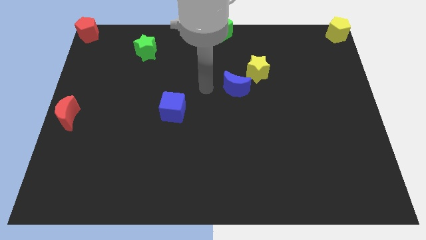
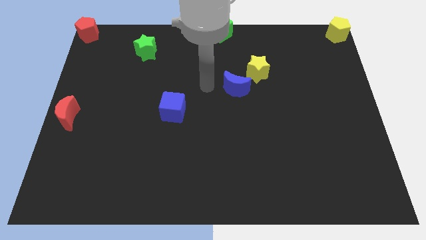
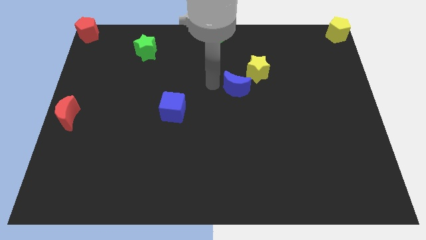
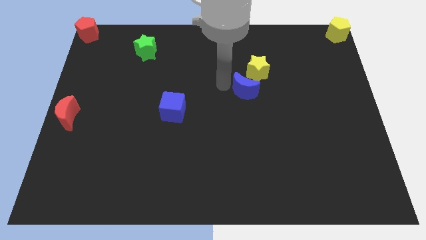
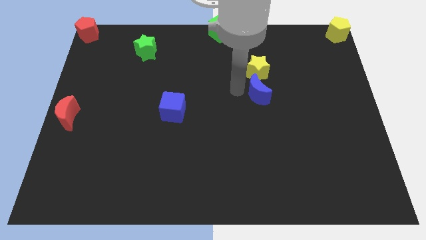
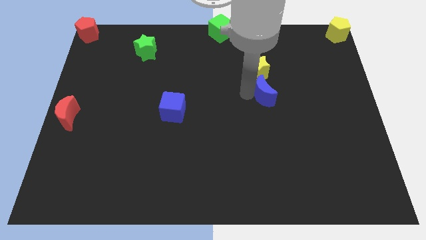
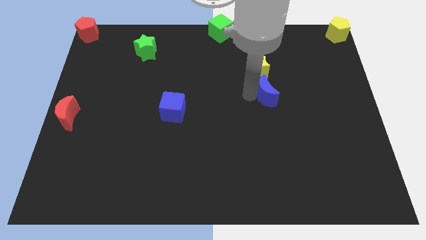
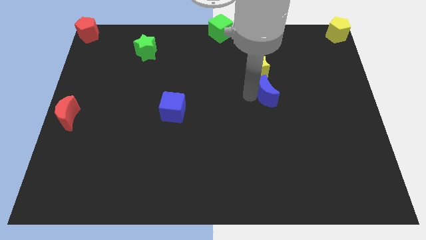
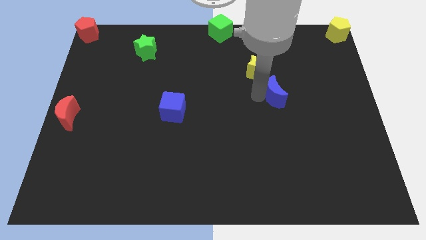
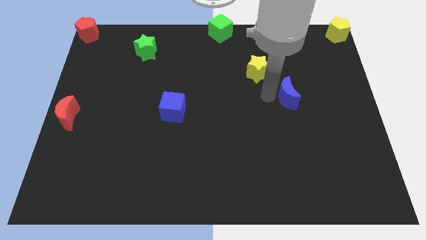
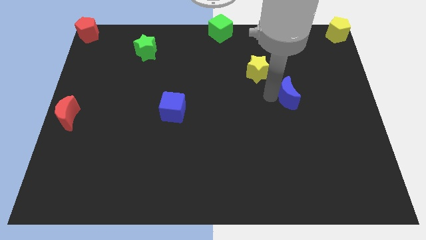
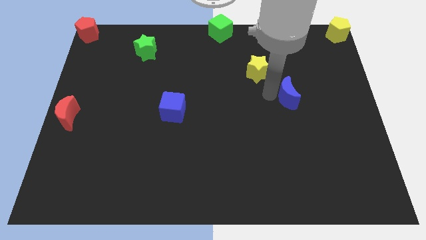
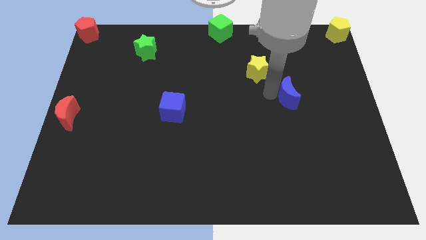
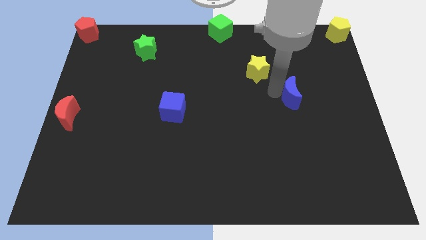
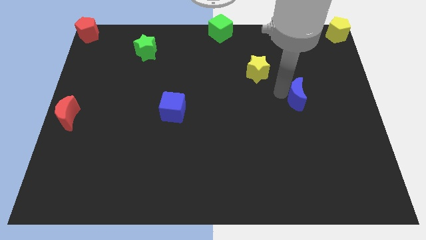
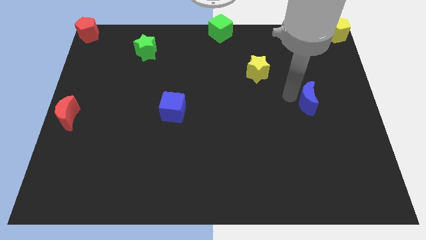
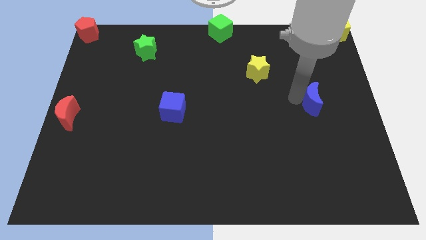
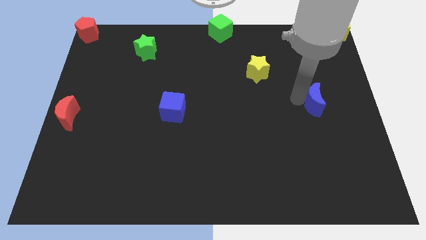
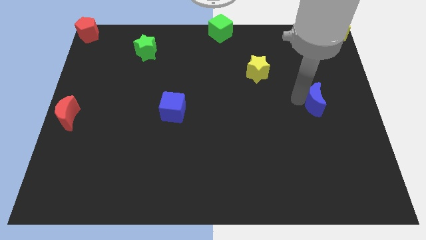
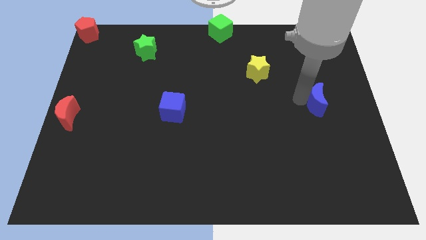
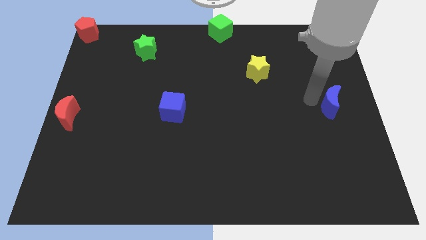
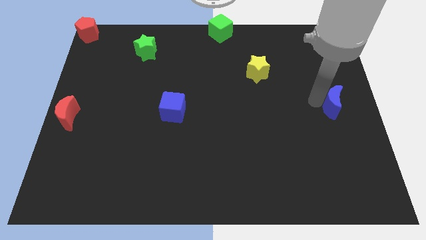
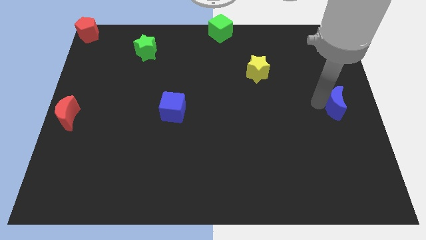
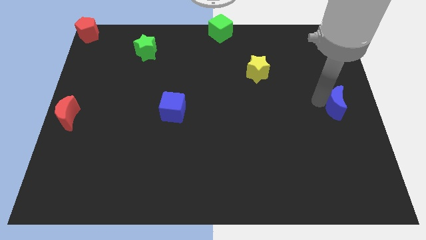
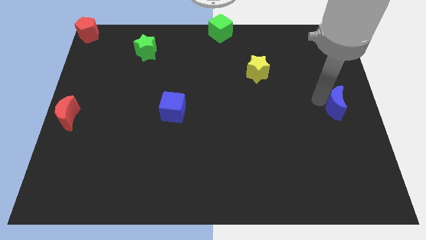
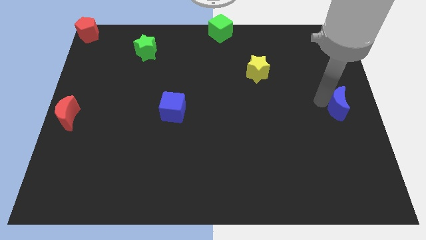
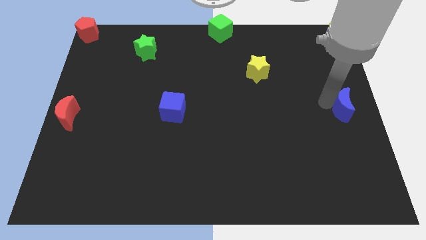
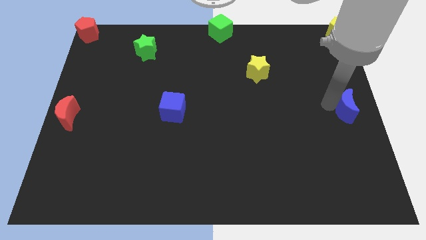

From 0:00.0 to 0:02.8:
push the blue crescent towards the right center of the board

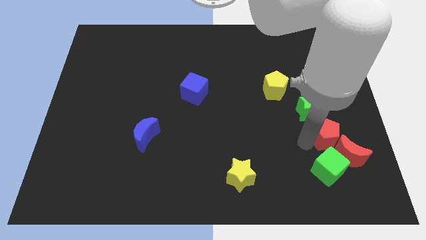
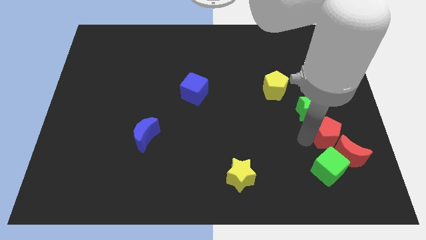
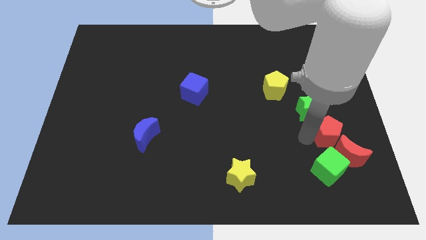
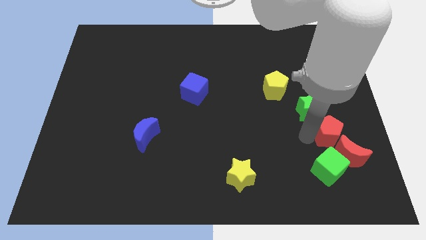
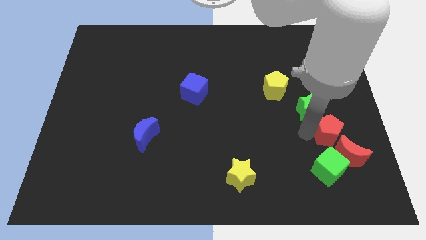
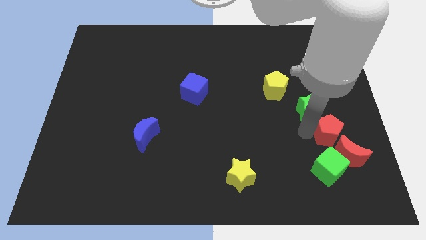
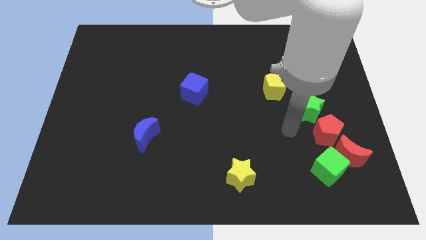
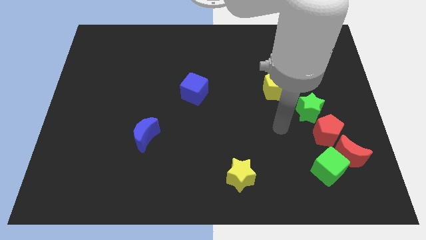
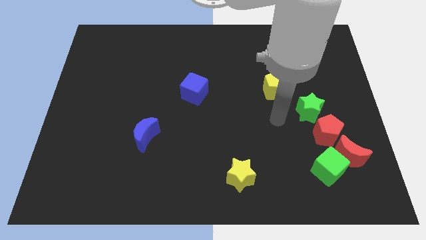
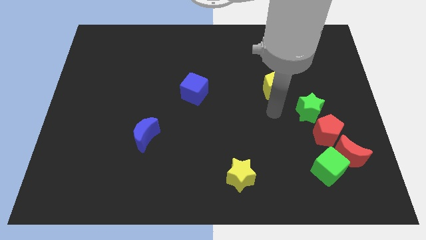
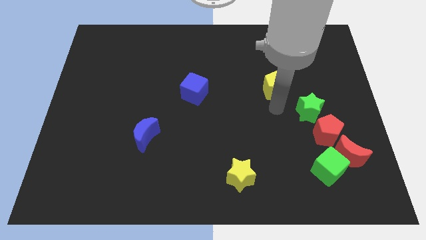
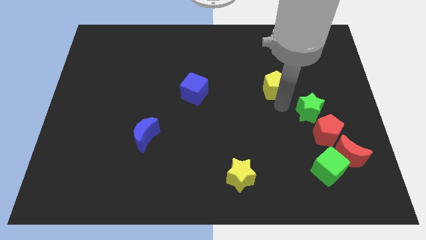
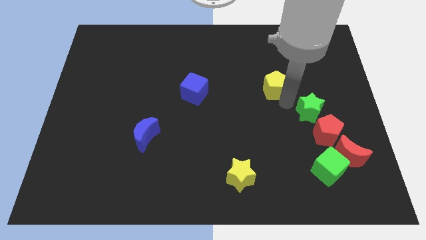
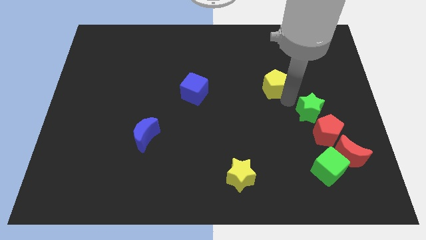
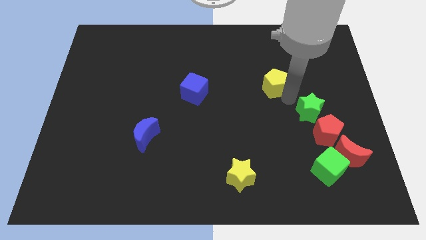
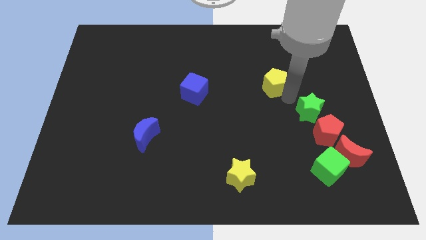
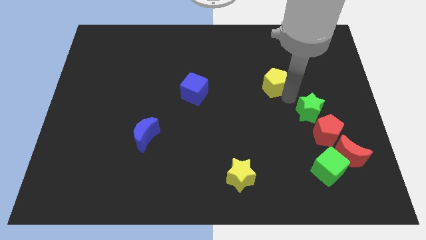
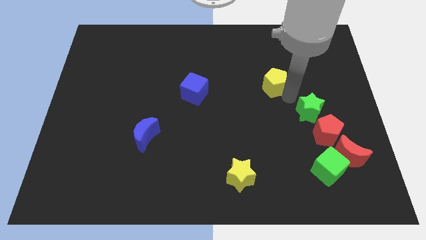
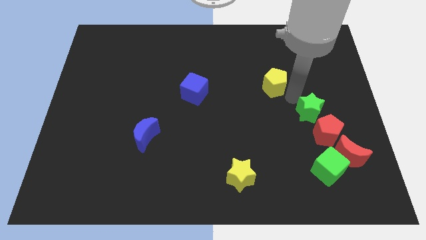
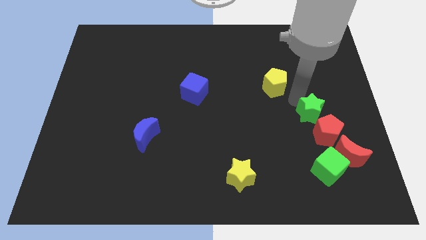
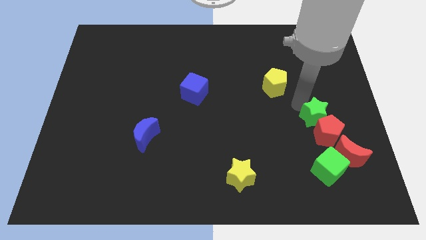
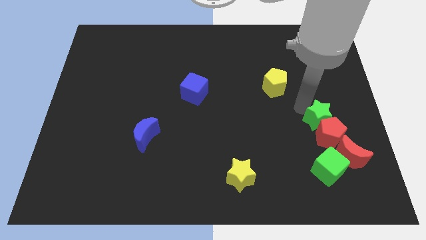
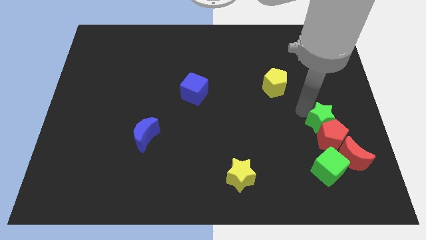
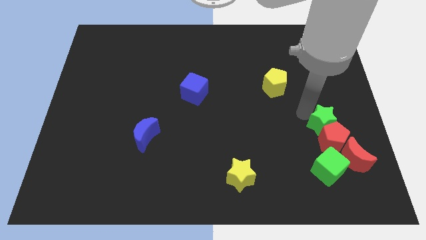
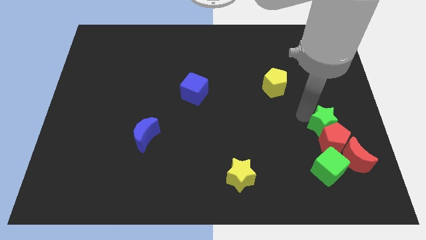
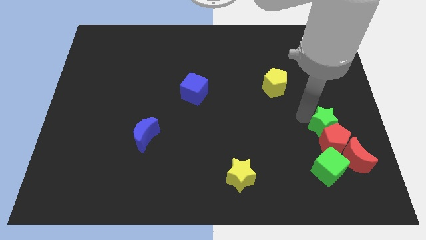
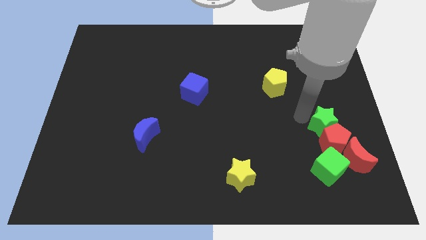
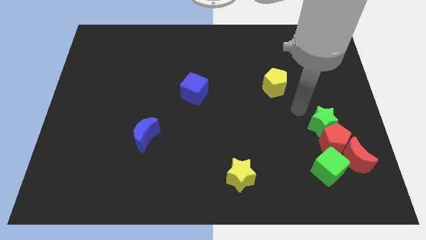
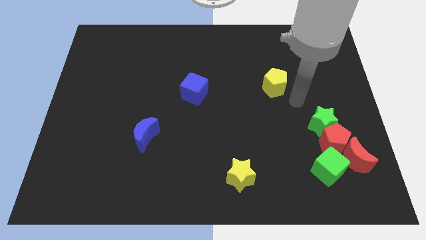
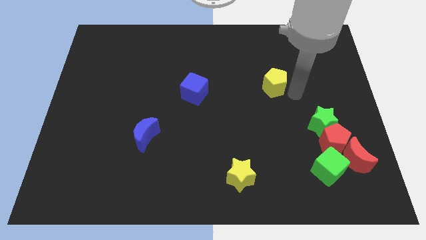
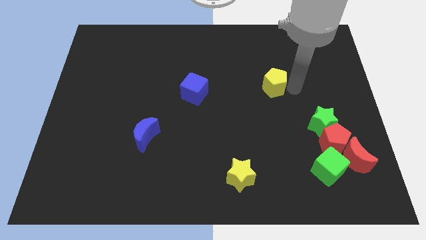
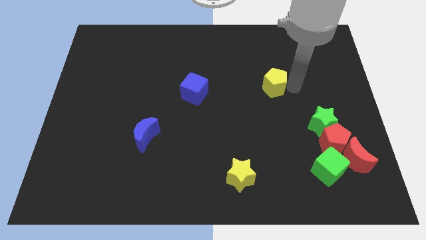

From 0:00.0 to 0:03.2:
move the green star into the red pentagon

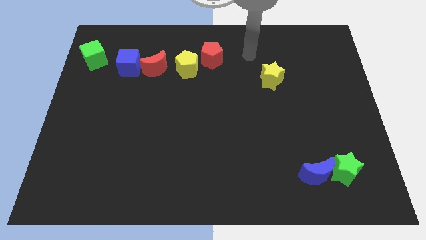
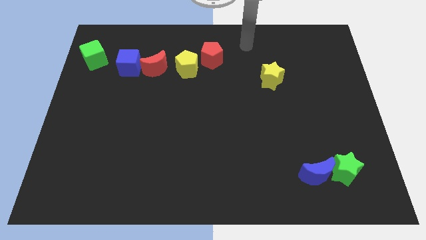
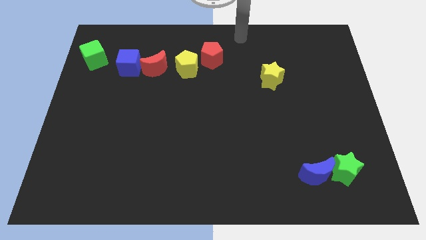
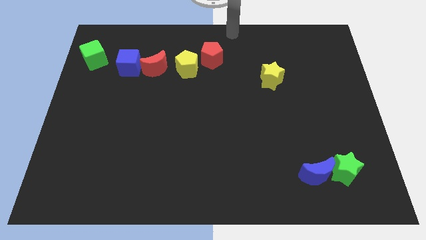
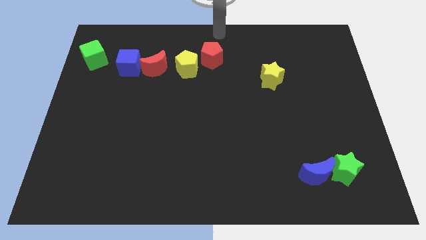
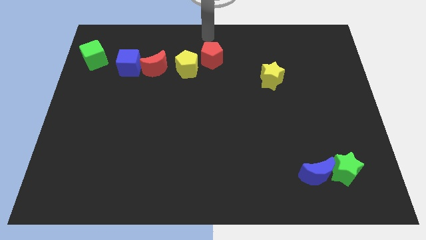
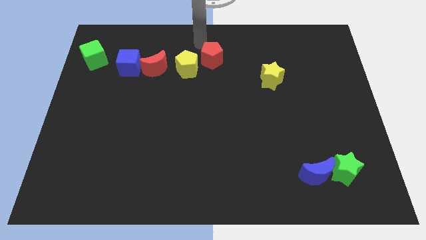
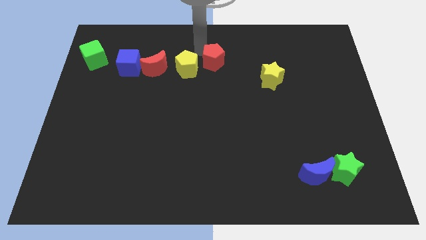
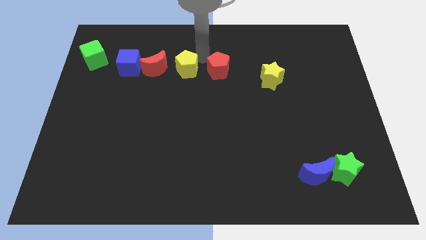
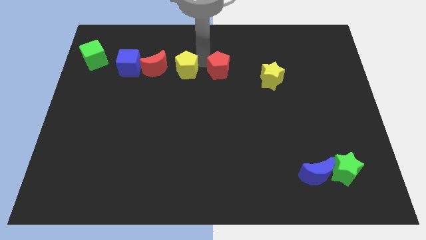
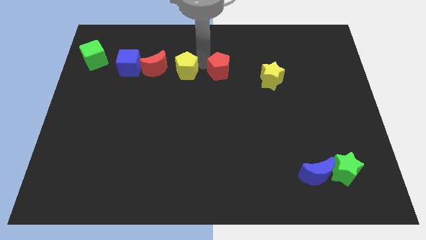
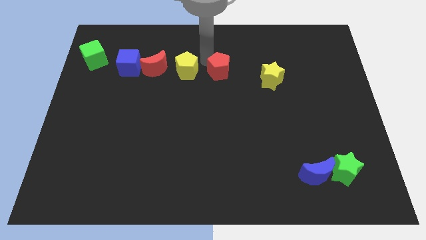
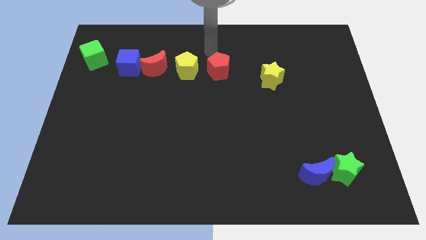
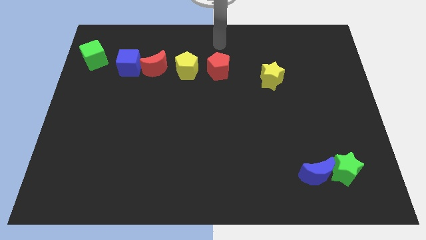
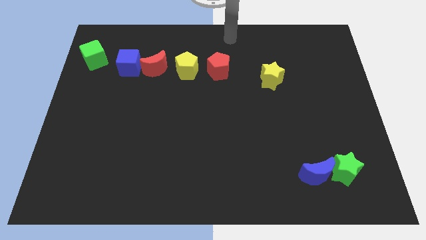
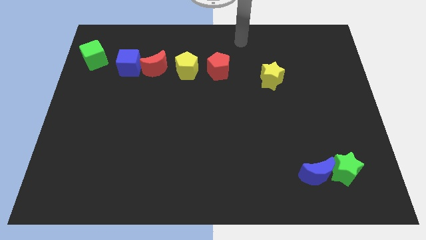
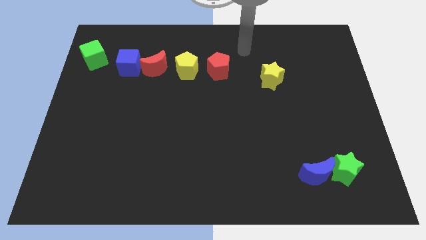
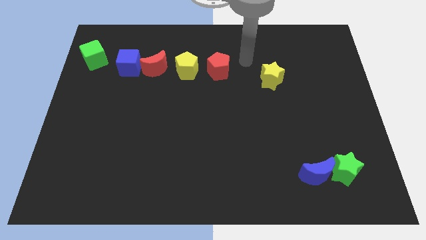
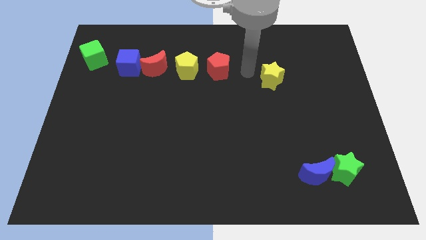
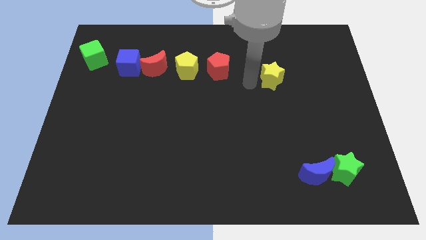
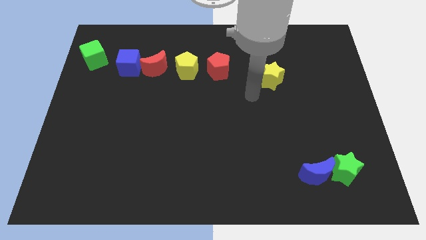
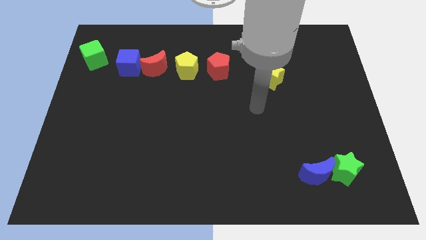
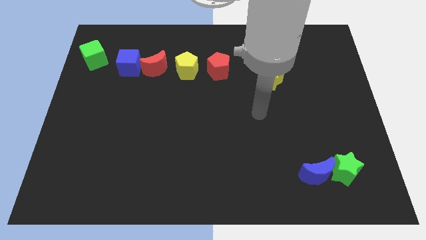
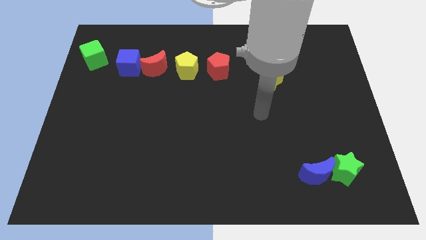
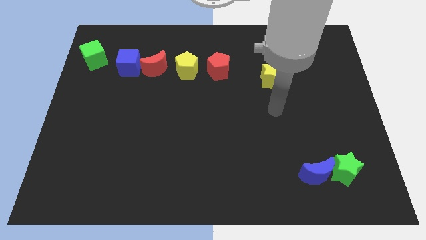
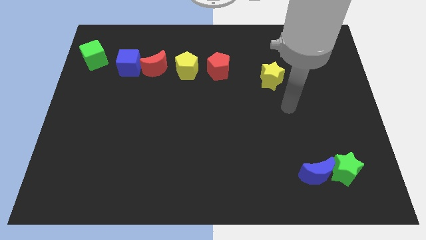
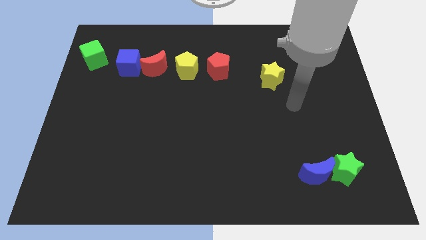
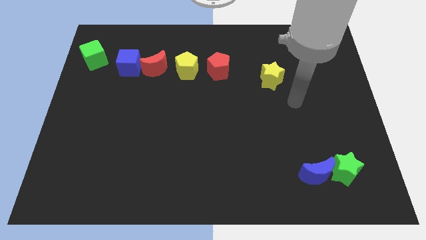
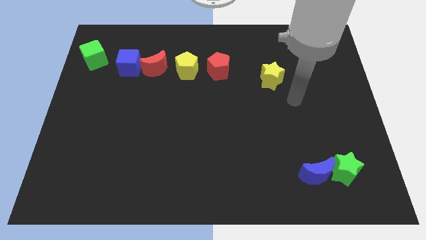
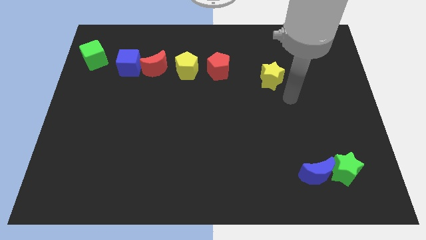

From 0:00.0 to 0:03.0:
place red pentagon to the right of yellow pentagon
